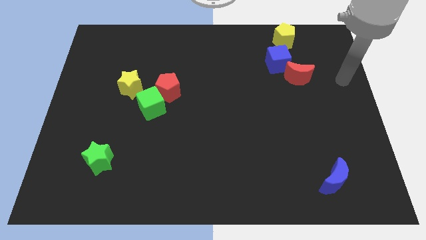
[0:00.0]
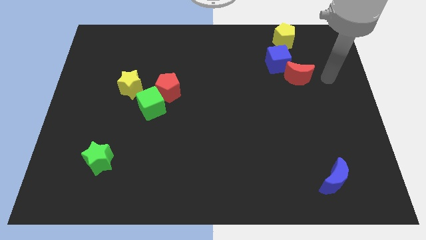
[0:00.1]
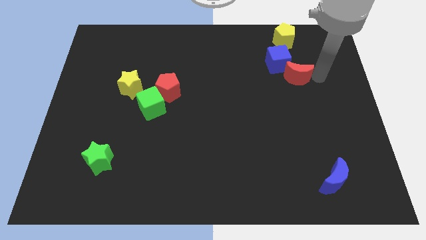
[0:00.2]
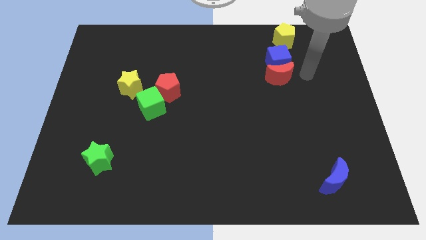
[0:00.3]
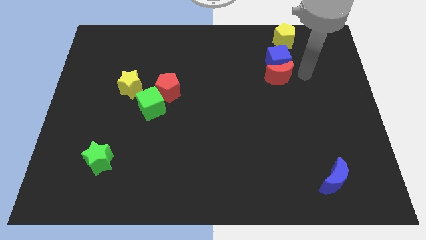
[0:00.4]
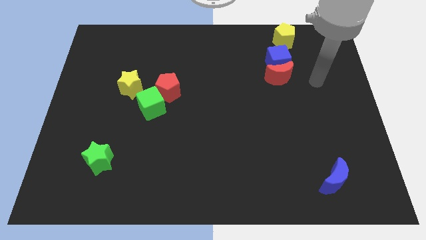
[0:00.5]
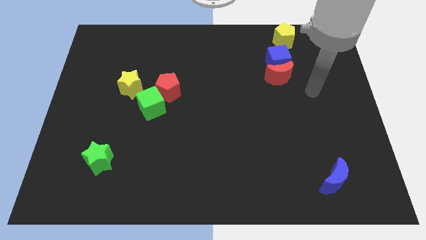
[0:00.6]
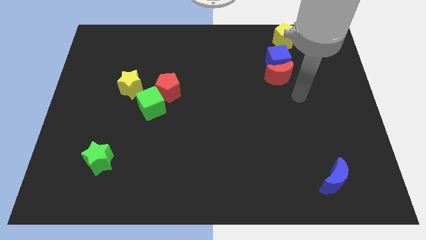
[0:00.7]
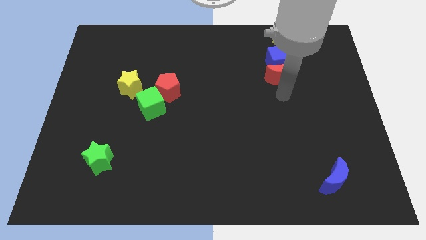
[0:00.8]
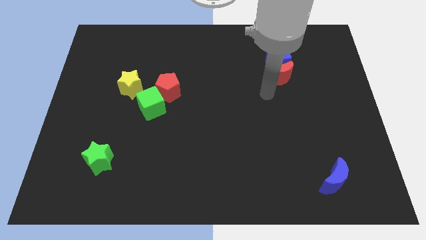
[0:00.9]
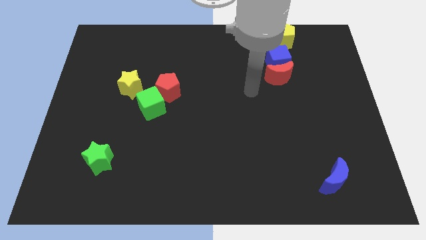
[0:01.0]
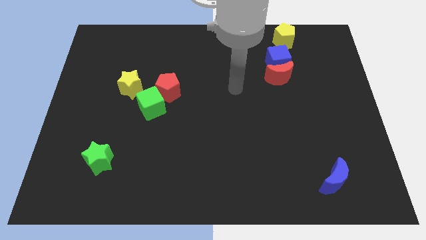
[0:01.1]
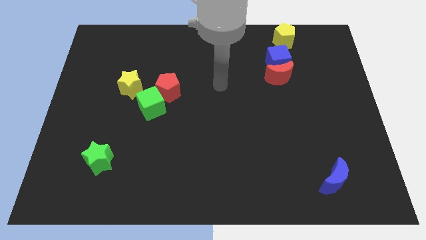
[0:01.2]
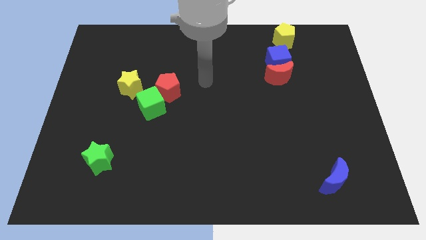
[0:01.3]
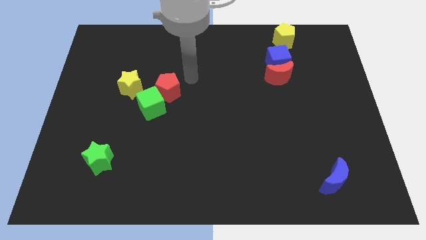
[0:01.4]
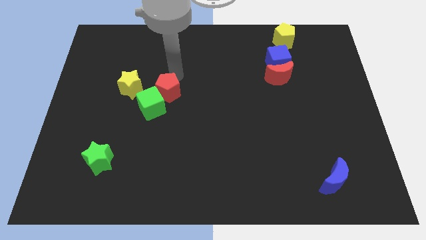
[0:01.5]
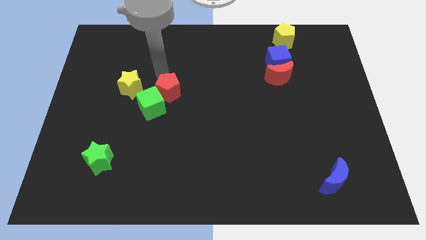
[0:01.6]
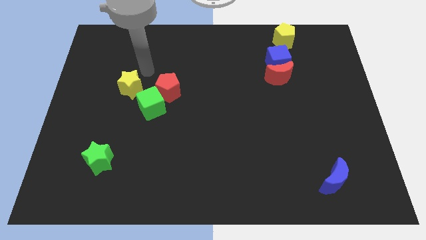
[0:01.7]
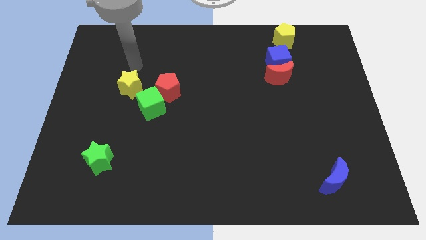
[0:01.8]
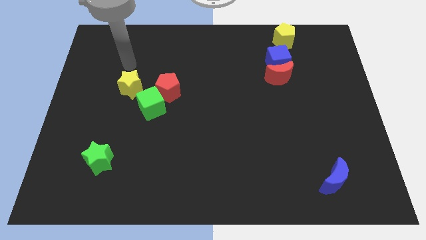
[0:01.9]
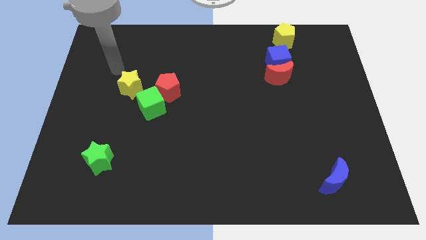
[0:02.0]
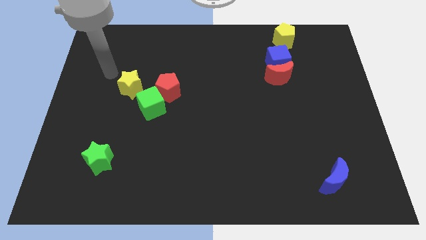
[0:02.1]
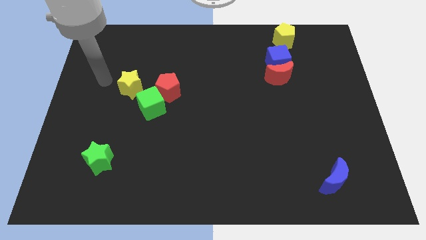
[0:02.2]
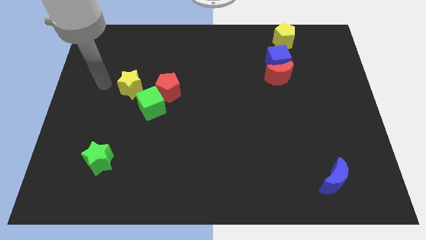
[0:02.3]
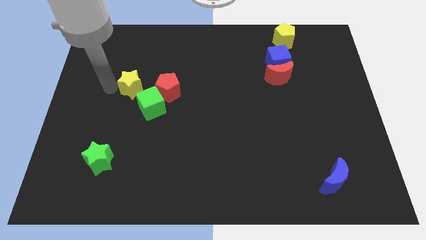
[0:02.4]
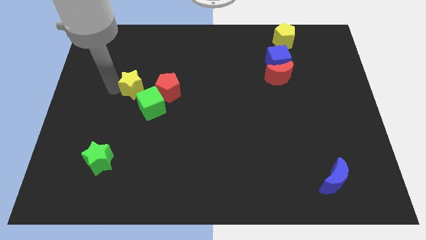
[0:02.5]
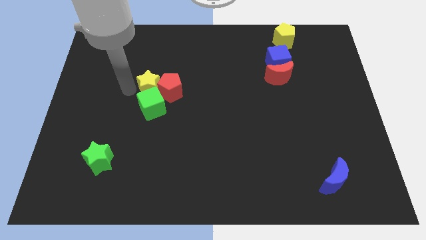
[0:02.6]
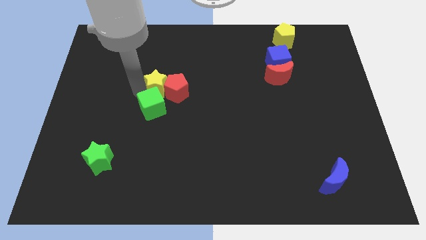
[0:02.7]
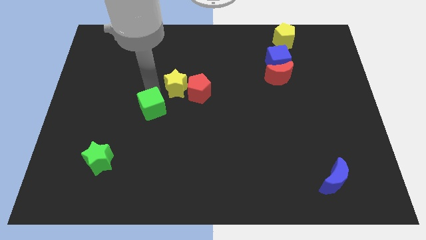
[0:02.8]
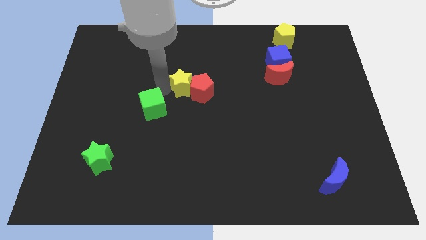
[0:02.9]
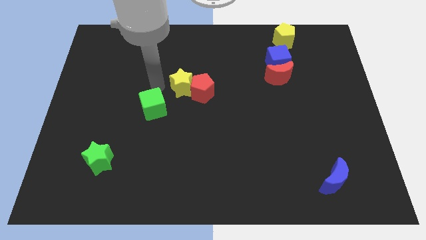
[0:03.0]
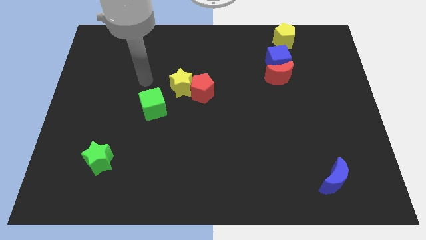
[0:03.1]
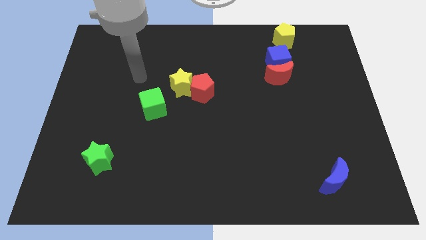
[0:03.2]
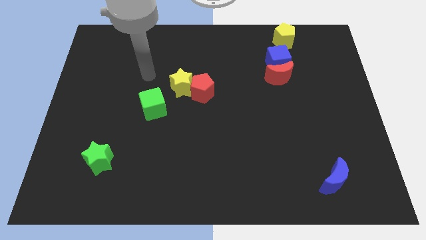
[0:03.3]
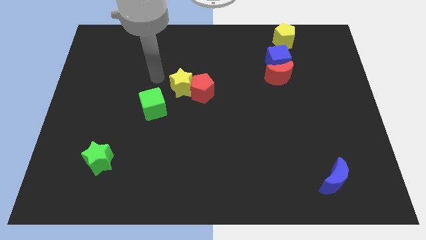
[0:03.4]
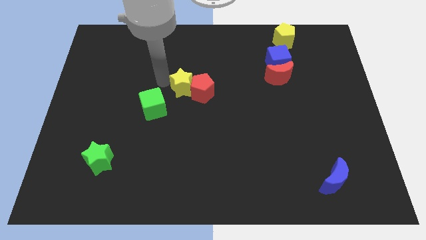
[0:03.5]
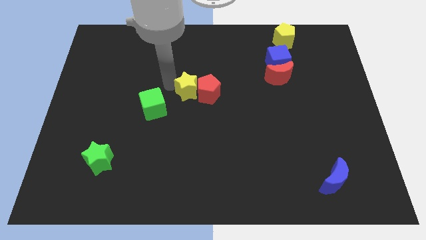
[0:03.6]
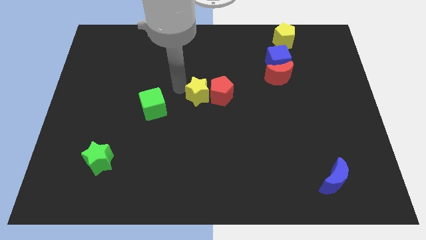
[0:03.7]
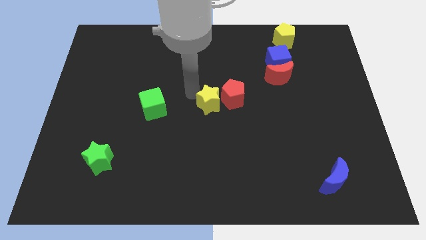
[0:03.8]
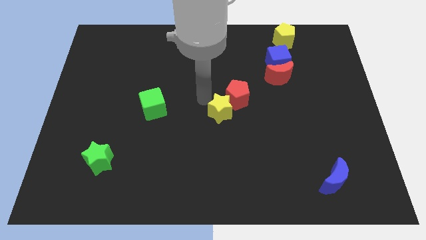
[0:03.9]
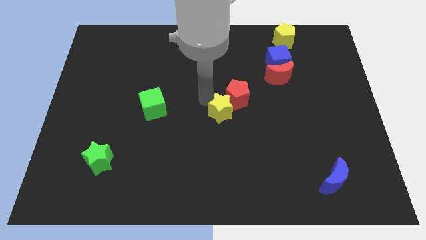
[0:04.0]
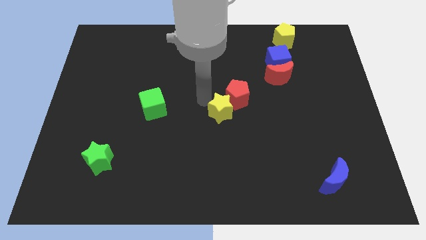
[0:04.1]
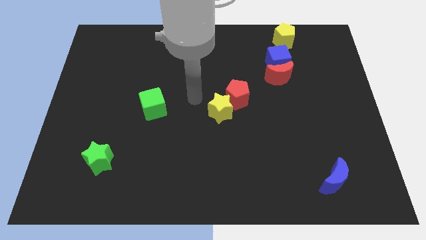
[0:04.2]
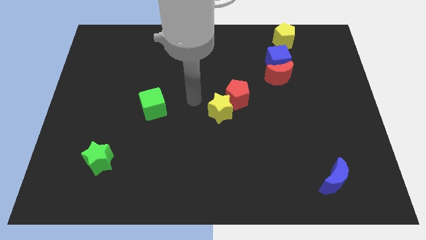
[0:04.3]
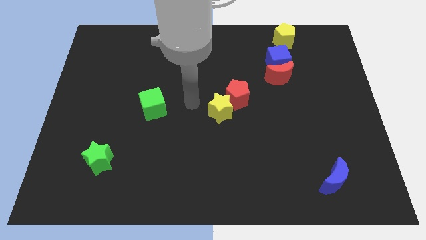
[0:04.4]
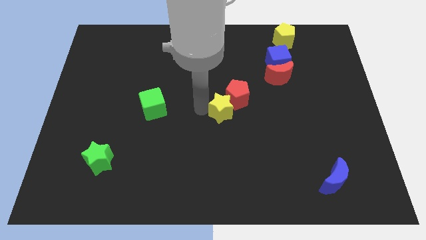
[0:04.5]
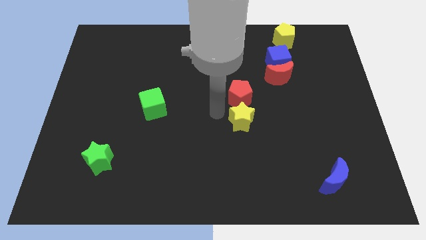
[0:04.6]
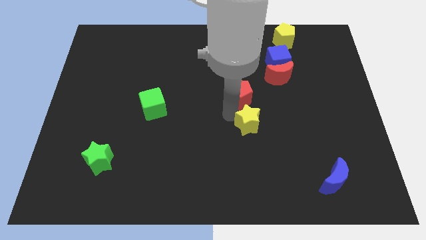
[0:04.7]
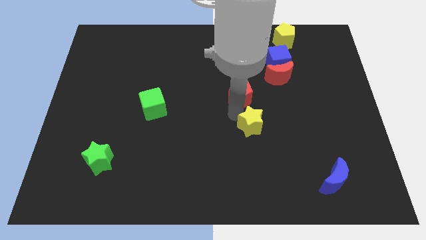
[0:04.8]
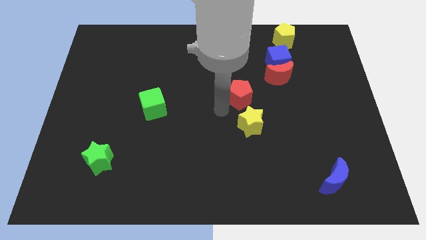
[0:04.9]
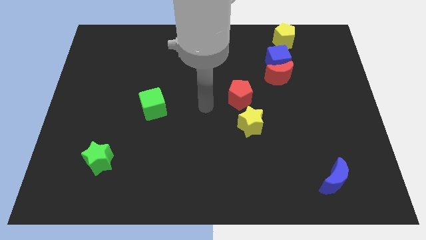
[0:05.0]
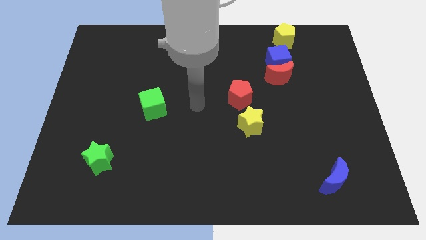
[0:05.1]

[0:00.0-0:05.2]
push the yellow star into the red pentagon

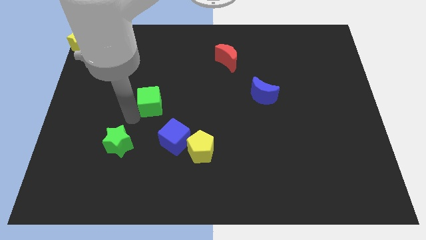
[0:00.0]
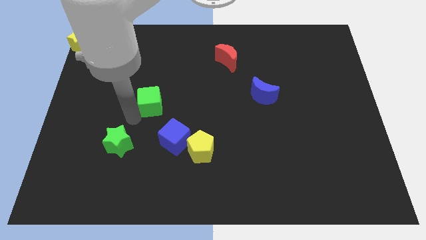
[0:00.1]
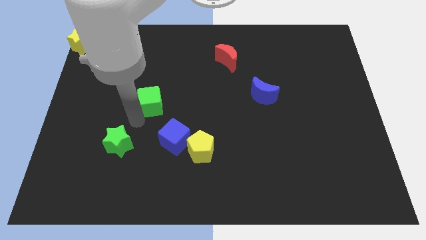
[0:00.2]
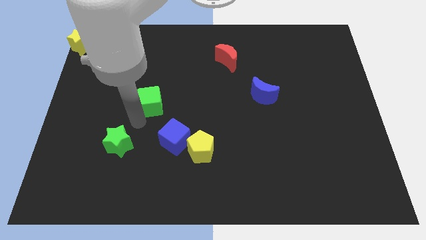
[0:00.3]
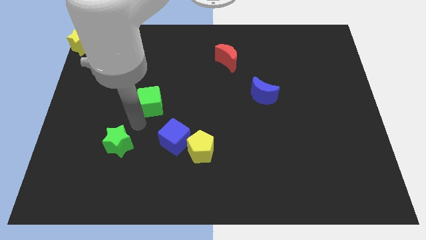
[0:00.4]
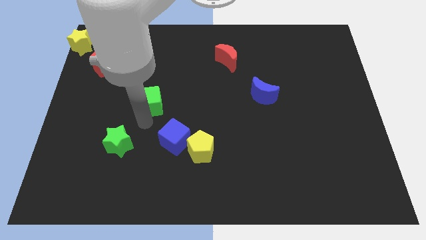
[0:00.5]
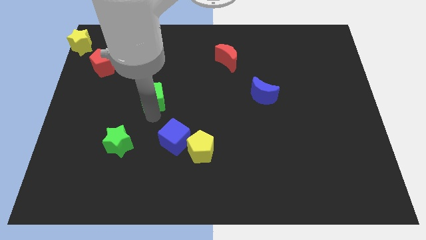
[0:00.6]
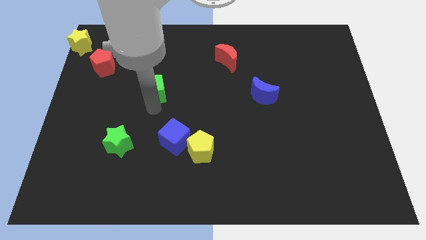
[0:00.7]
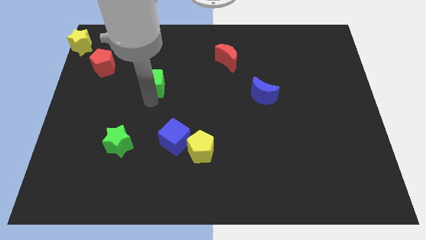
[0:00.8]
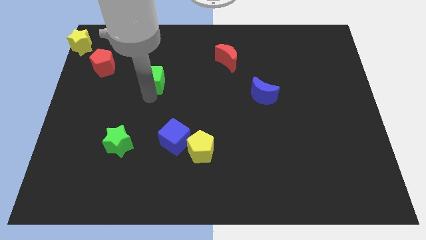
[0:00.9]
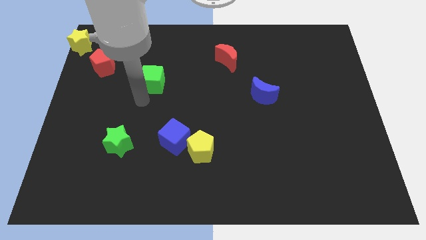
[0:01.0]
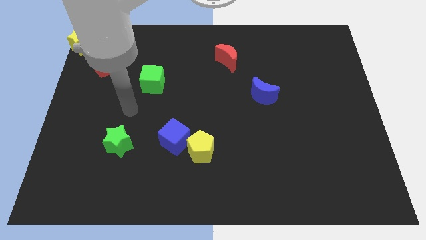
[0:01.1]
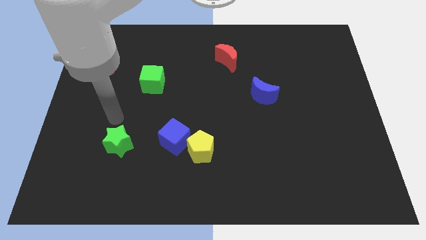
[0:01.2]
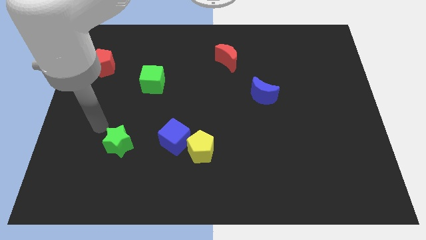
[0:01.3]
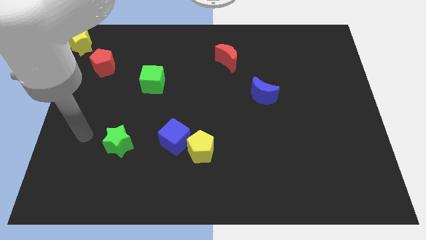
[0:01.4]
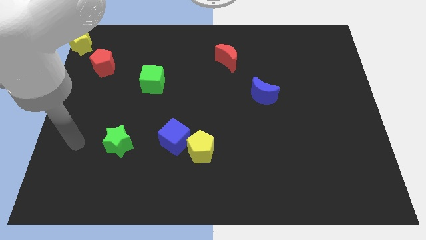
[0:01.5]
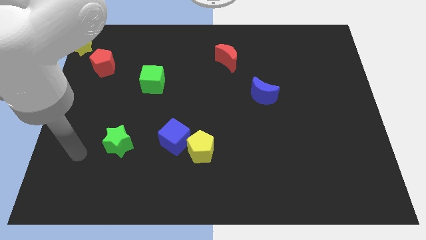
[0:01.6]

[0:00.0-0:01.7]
push the green cube slightly to the top side of the board

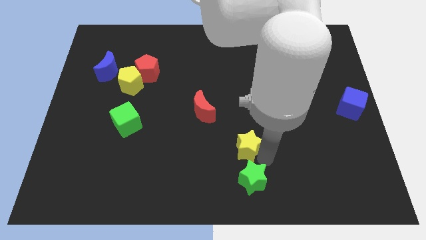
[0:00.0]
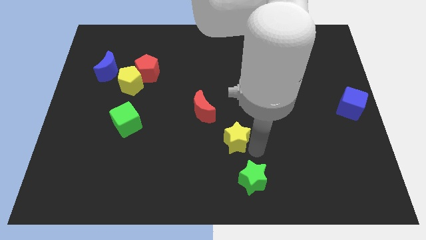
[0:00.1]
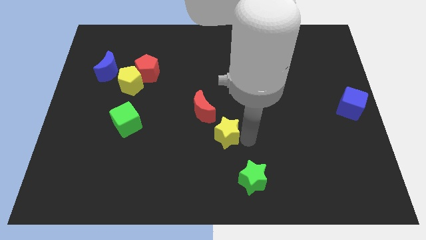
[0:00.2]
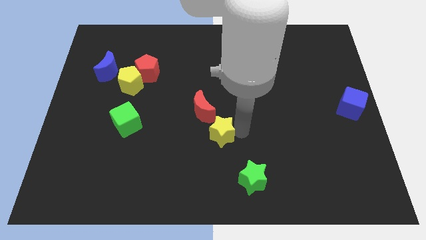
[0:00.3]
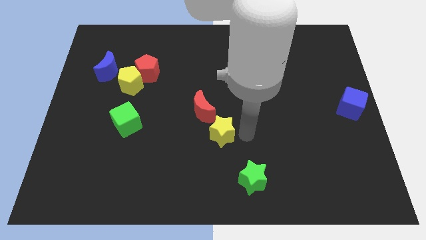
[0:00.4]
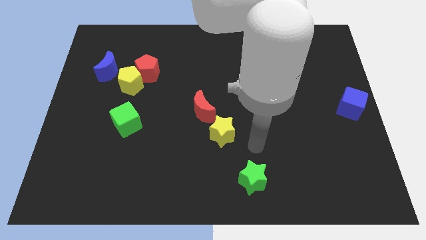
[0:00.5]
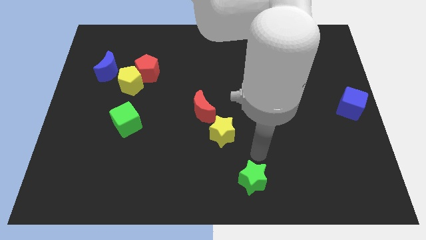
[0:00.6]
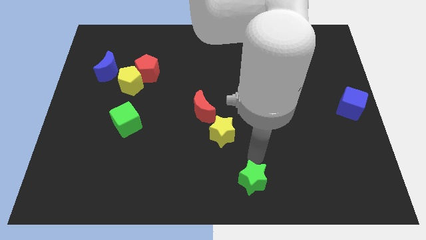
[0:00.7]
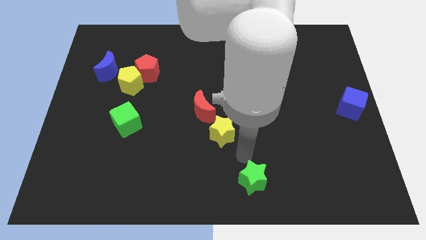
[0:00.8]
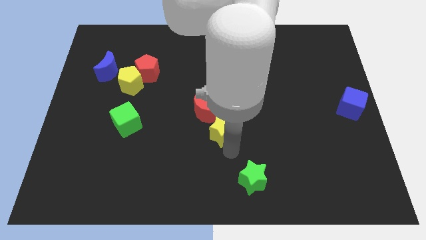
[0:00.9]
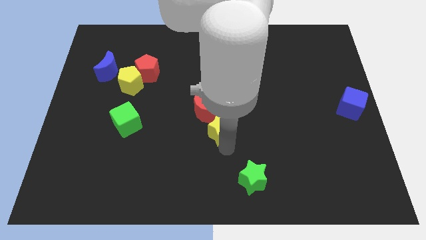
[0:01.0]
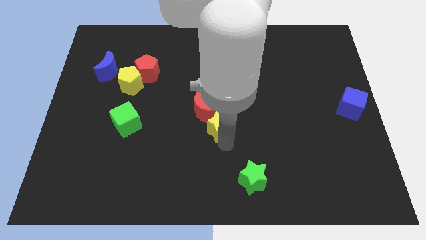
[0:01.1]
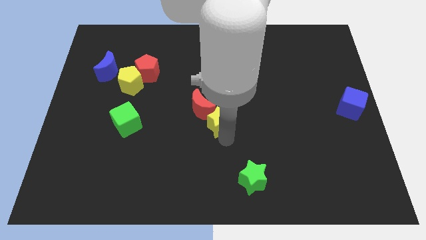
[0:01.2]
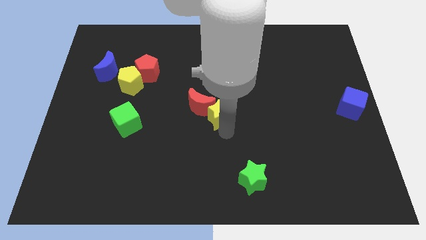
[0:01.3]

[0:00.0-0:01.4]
drag the yellow pentagon slightly upwards

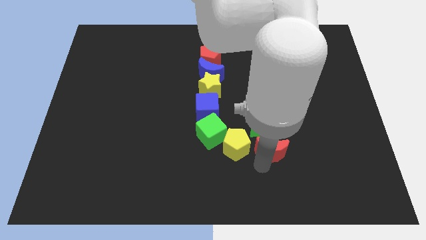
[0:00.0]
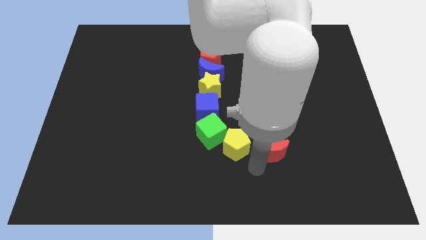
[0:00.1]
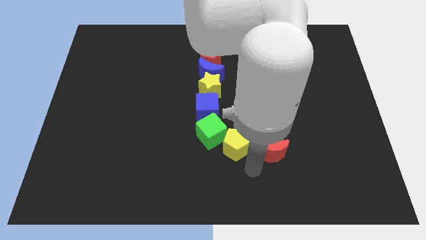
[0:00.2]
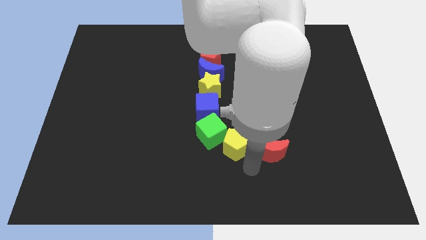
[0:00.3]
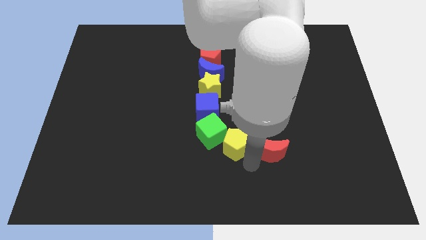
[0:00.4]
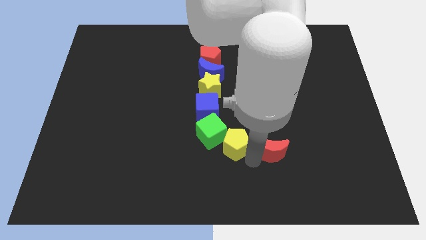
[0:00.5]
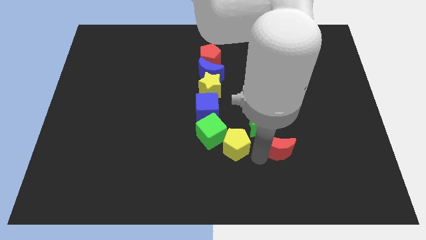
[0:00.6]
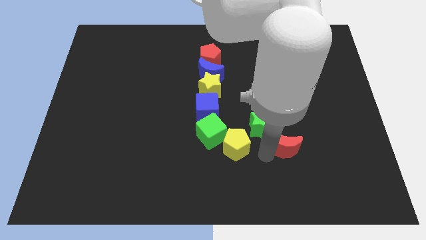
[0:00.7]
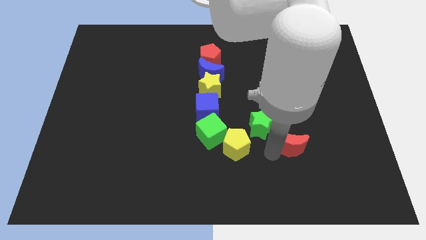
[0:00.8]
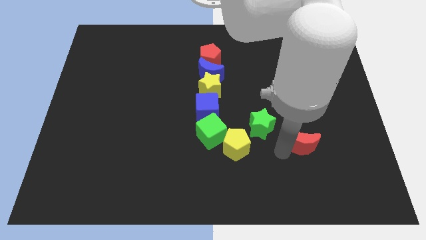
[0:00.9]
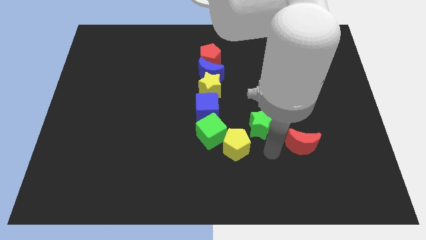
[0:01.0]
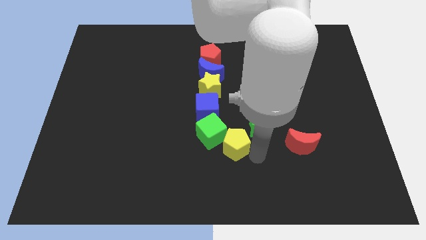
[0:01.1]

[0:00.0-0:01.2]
place red crescent on the right side of the green star
